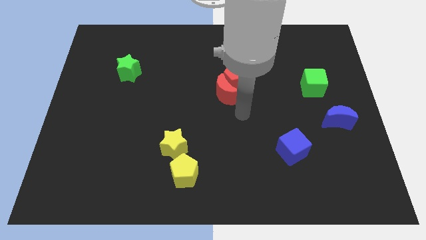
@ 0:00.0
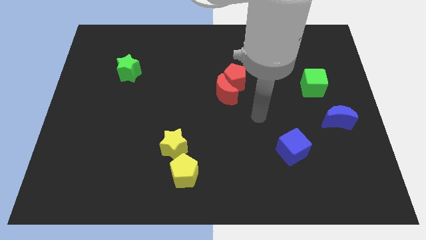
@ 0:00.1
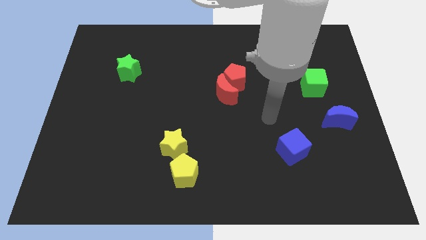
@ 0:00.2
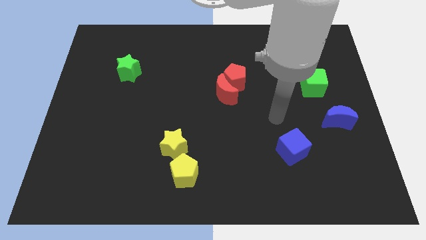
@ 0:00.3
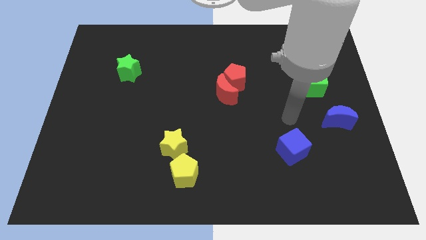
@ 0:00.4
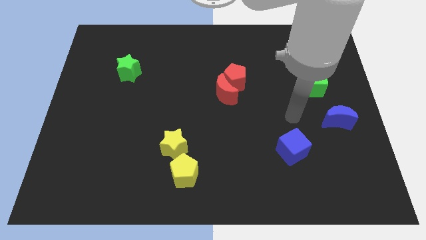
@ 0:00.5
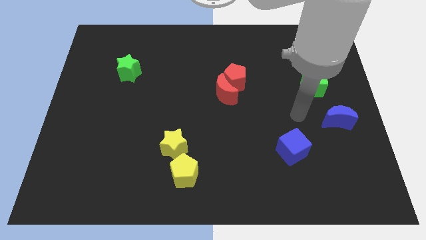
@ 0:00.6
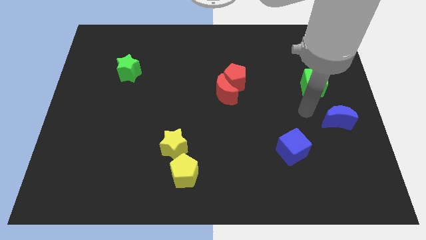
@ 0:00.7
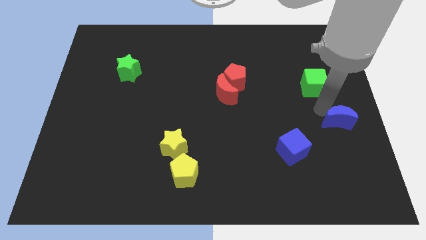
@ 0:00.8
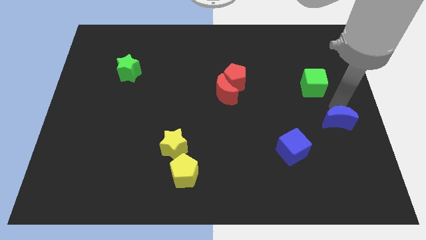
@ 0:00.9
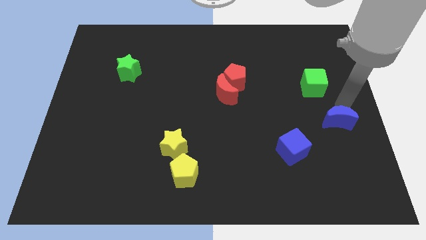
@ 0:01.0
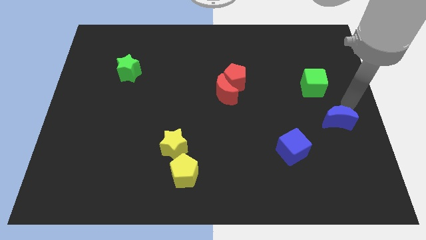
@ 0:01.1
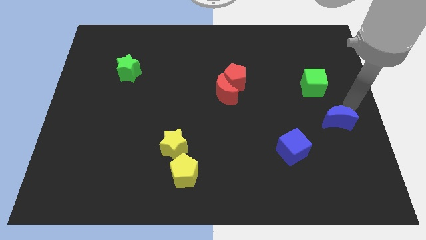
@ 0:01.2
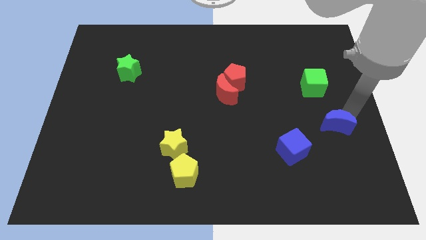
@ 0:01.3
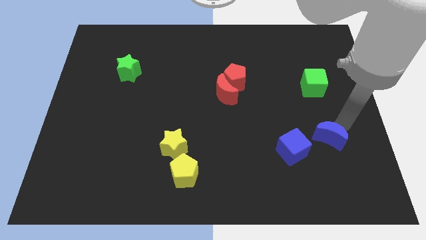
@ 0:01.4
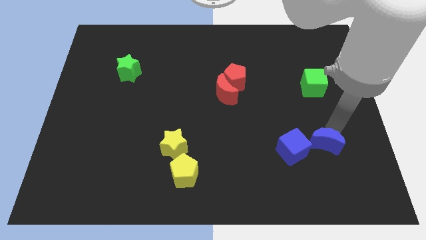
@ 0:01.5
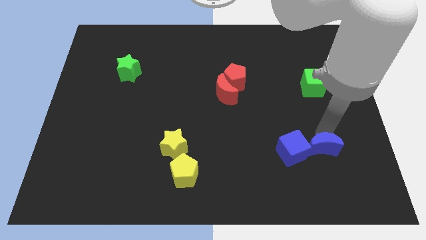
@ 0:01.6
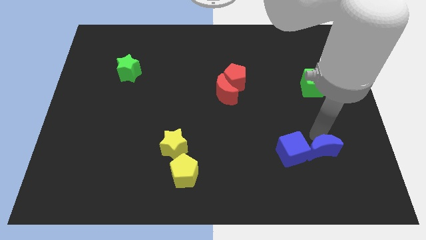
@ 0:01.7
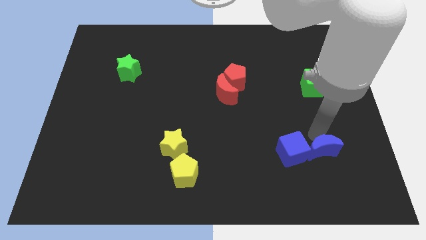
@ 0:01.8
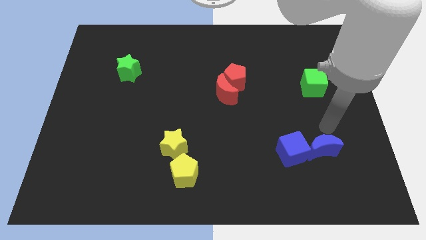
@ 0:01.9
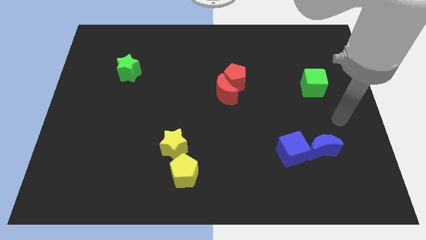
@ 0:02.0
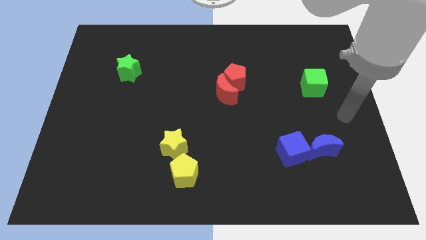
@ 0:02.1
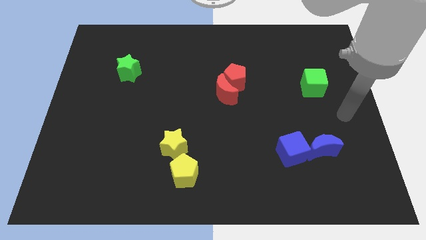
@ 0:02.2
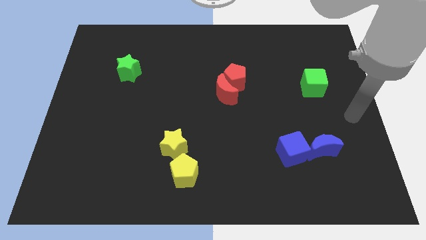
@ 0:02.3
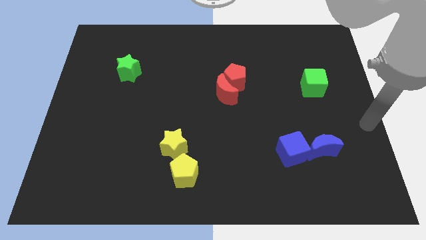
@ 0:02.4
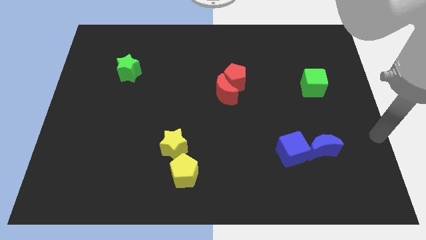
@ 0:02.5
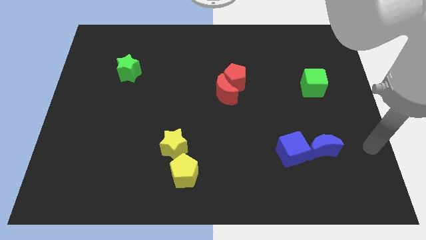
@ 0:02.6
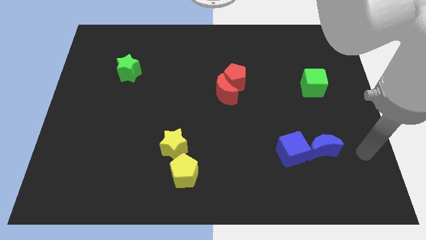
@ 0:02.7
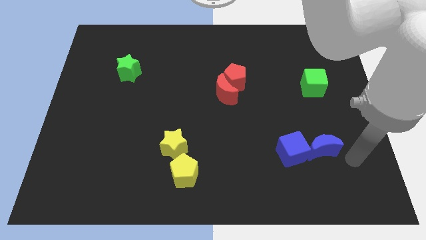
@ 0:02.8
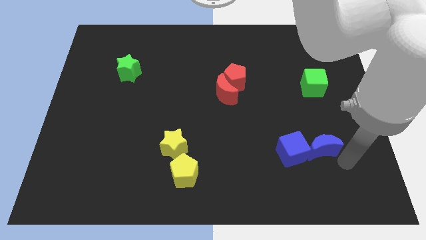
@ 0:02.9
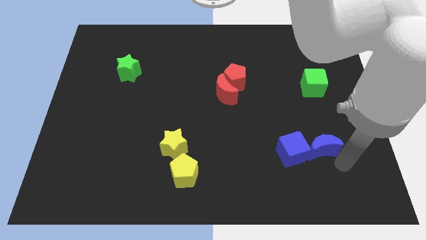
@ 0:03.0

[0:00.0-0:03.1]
move the blue crescent to the right of the blue cube

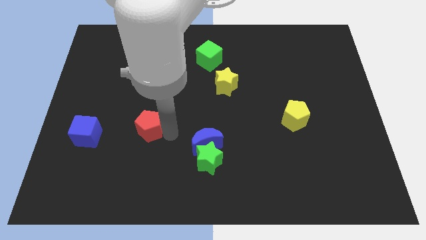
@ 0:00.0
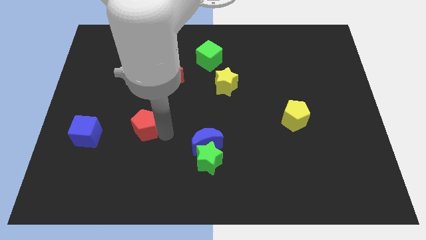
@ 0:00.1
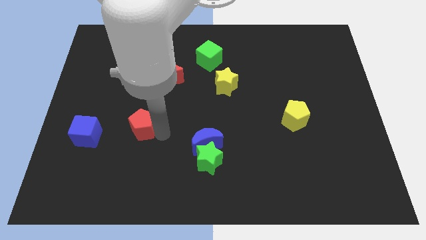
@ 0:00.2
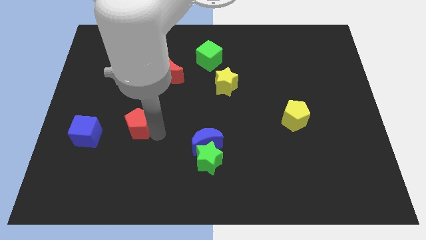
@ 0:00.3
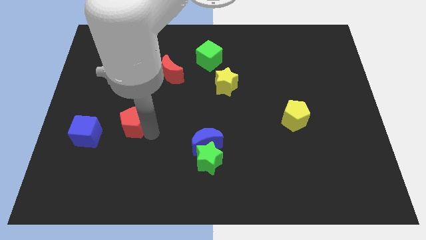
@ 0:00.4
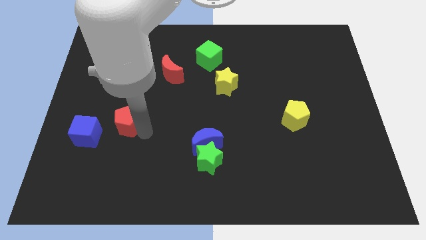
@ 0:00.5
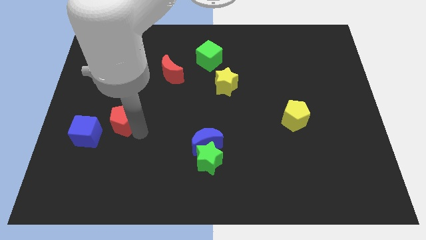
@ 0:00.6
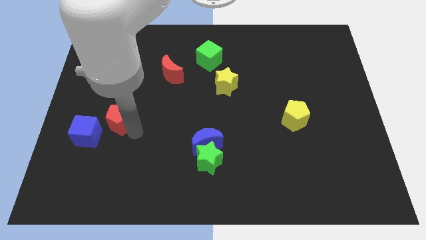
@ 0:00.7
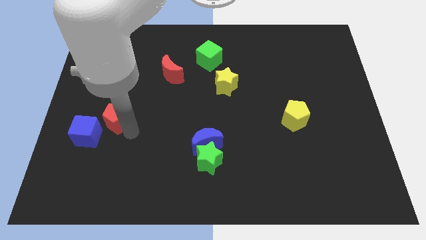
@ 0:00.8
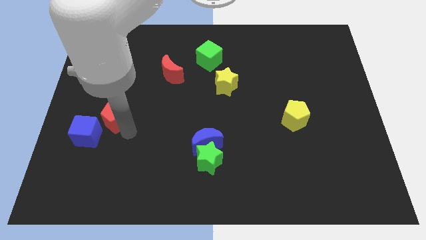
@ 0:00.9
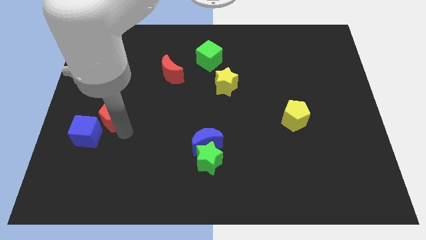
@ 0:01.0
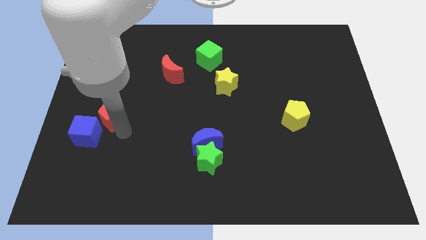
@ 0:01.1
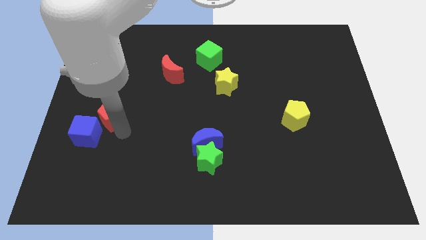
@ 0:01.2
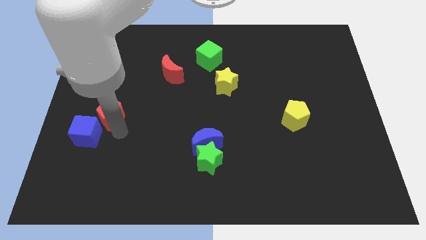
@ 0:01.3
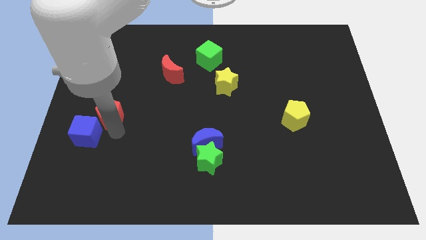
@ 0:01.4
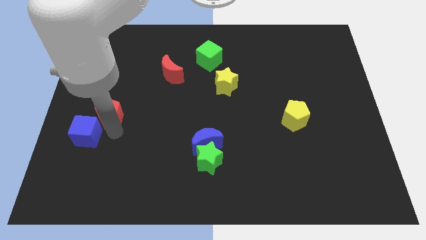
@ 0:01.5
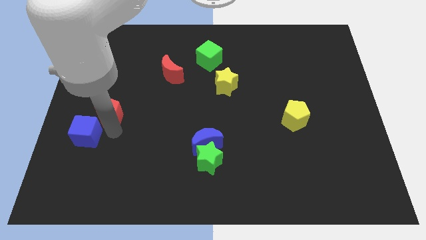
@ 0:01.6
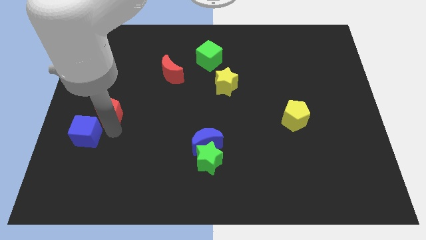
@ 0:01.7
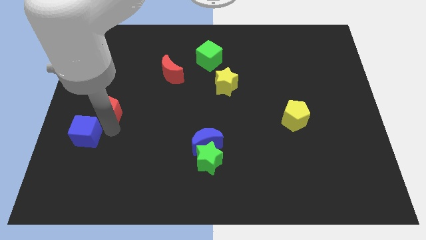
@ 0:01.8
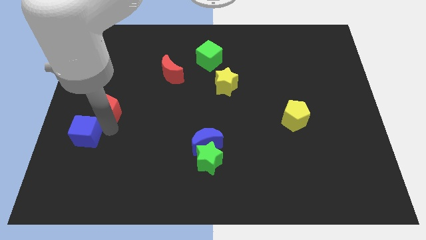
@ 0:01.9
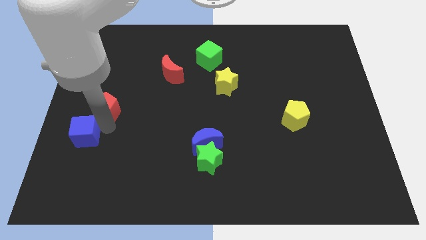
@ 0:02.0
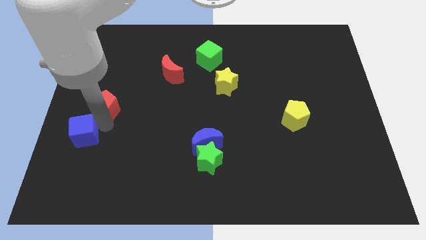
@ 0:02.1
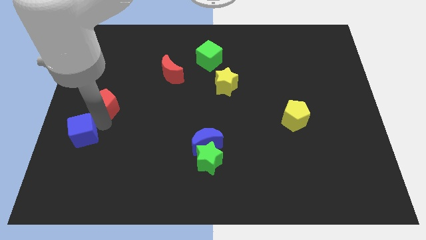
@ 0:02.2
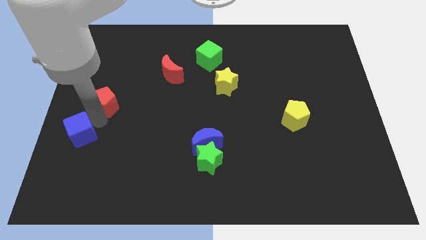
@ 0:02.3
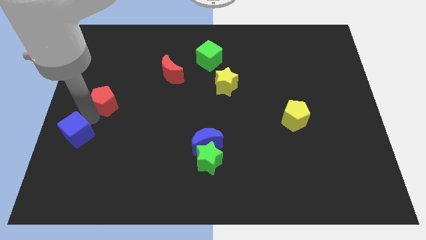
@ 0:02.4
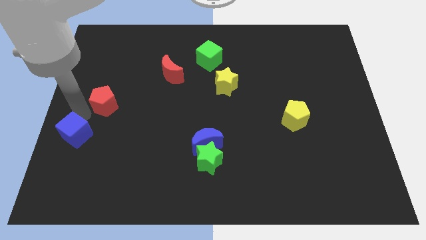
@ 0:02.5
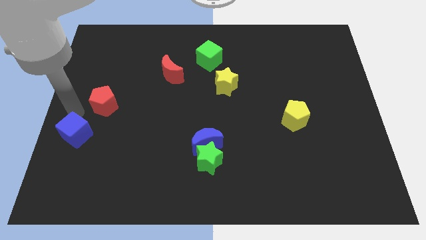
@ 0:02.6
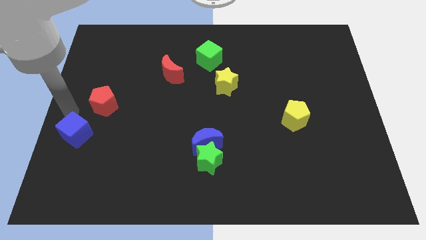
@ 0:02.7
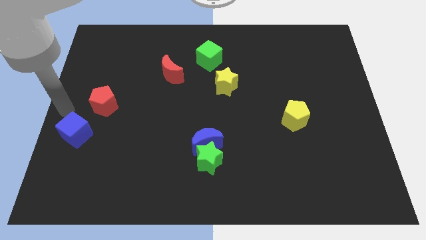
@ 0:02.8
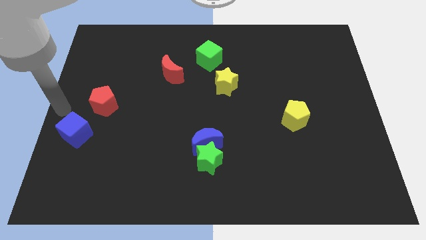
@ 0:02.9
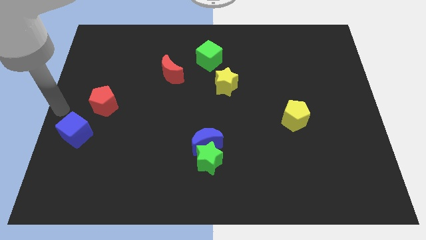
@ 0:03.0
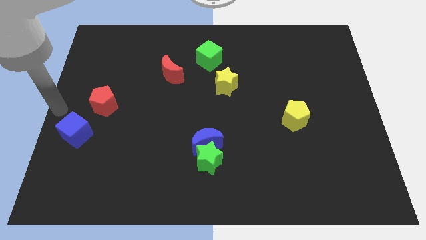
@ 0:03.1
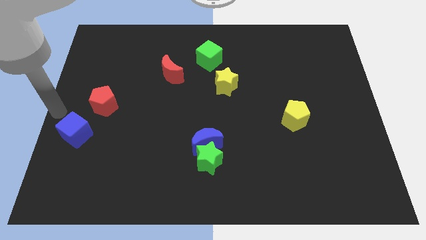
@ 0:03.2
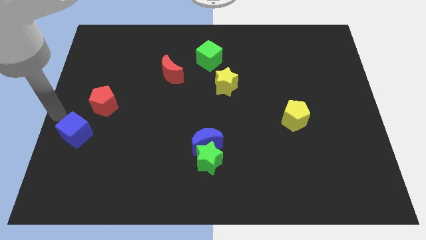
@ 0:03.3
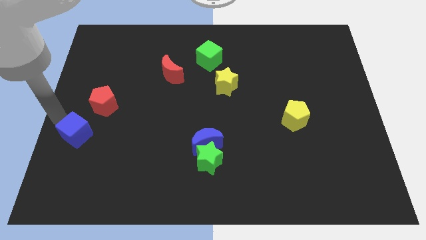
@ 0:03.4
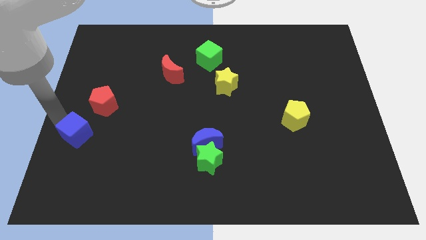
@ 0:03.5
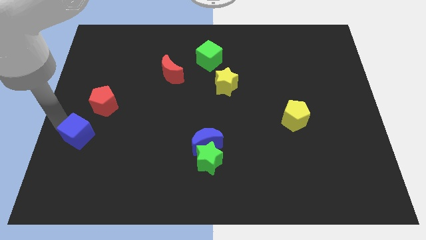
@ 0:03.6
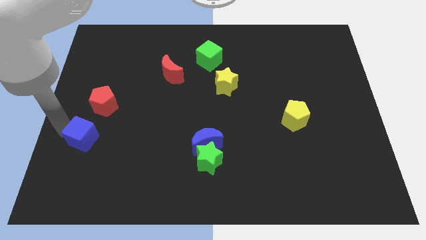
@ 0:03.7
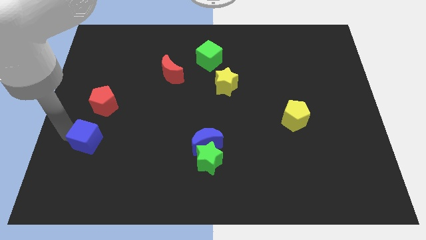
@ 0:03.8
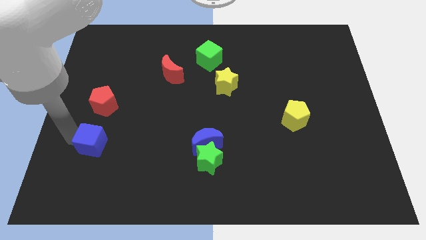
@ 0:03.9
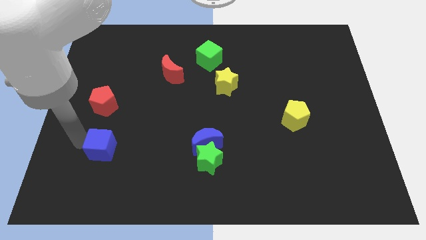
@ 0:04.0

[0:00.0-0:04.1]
move the blue cube below the red pentagon

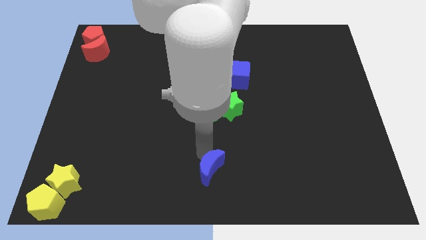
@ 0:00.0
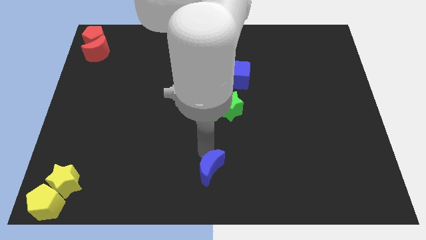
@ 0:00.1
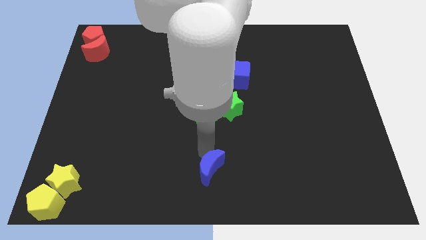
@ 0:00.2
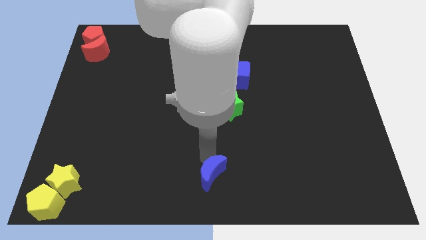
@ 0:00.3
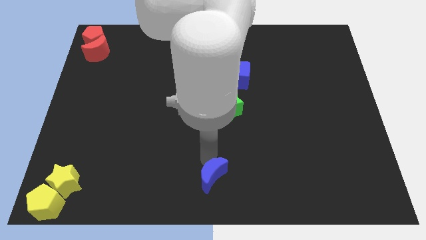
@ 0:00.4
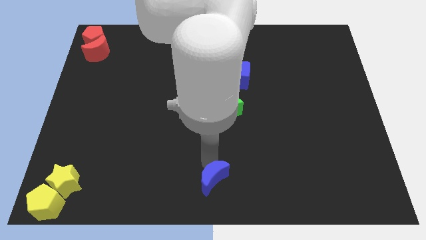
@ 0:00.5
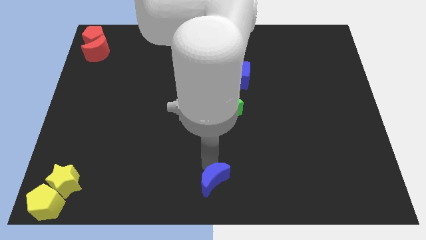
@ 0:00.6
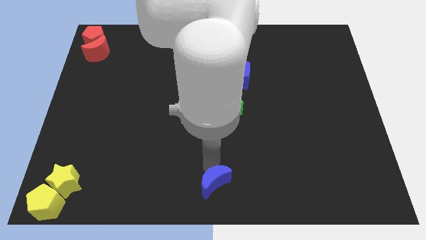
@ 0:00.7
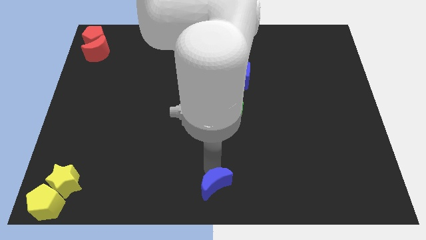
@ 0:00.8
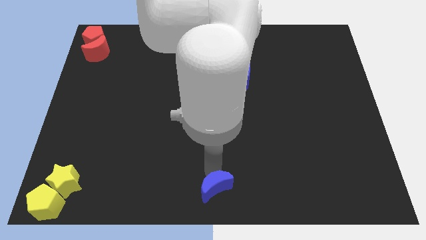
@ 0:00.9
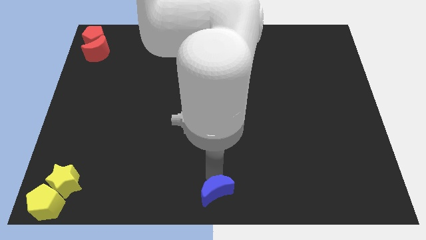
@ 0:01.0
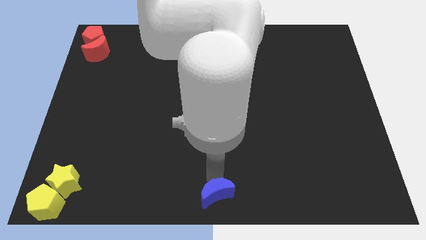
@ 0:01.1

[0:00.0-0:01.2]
place the blue crescent towards the bottom center of the board

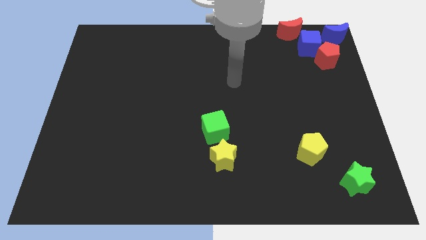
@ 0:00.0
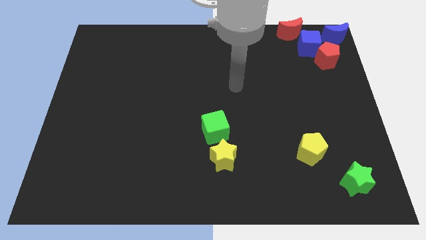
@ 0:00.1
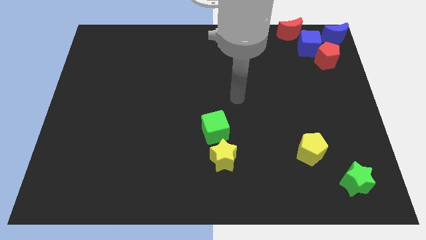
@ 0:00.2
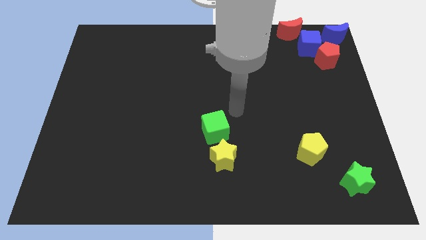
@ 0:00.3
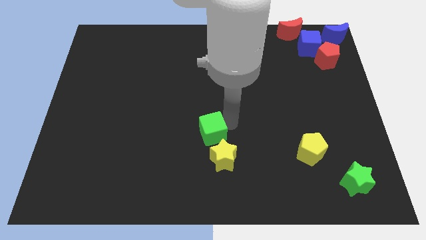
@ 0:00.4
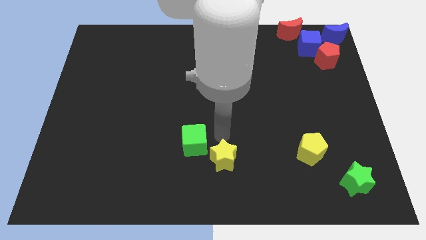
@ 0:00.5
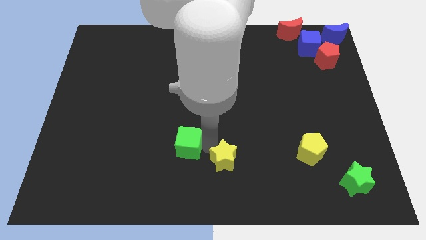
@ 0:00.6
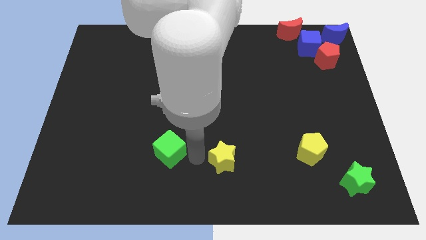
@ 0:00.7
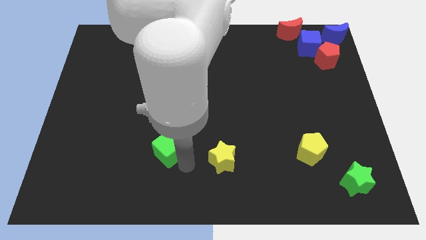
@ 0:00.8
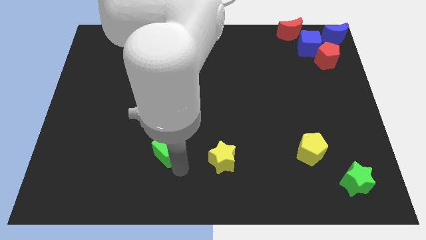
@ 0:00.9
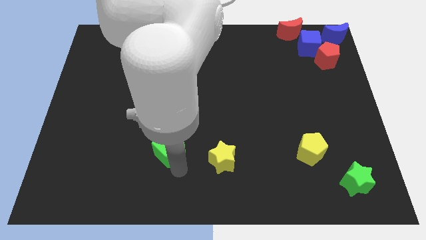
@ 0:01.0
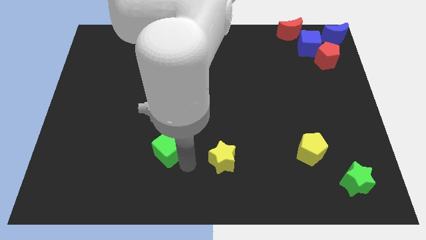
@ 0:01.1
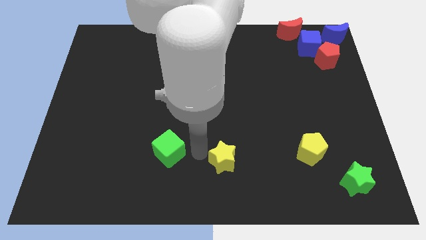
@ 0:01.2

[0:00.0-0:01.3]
separate the green cube and the yellow star
